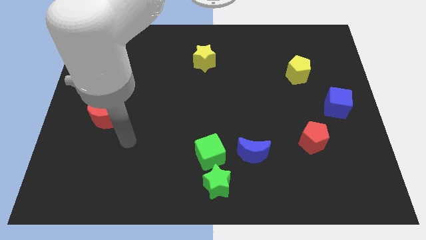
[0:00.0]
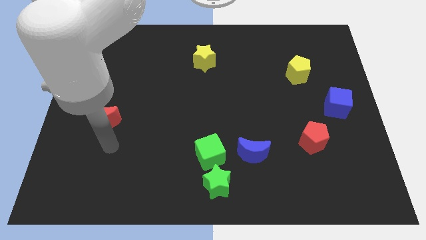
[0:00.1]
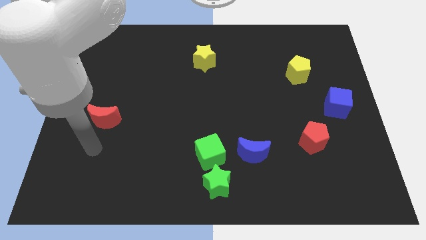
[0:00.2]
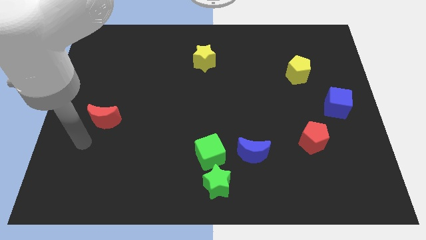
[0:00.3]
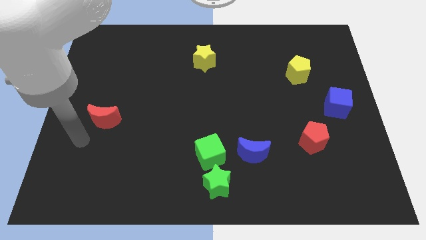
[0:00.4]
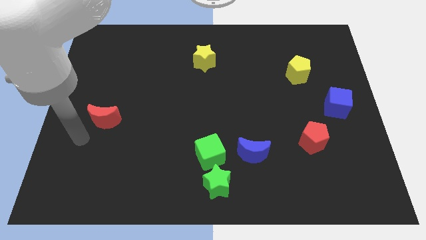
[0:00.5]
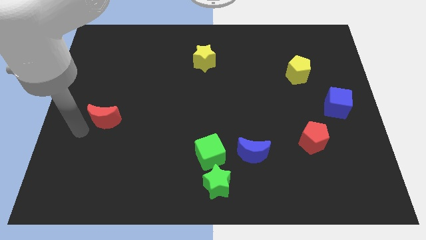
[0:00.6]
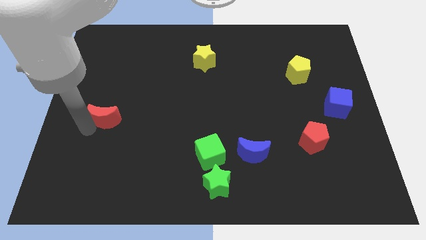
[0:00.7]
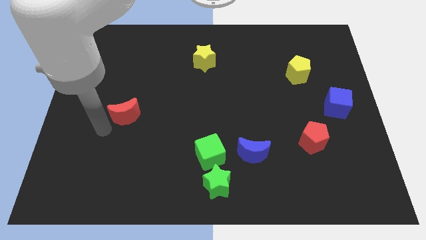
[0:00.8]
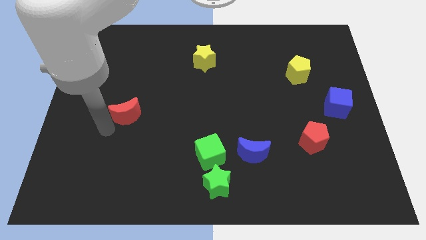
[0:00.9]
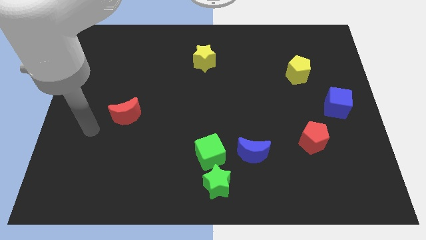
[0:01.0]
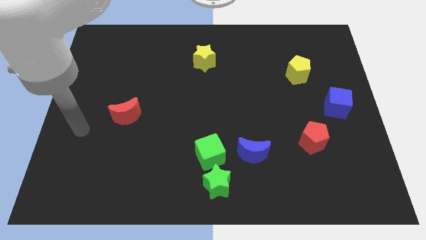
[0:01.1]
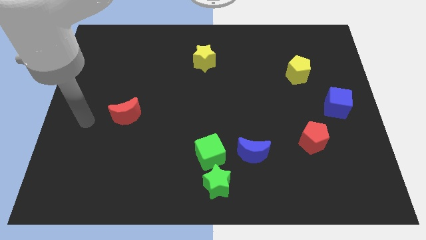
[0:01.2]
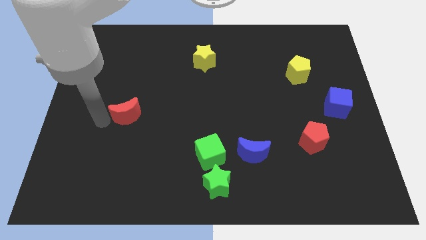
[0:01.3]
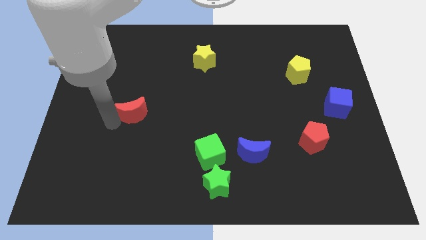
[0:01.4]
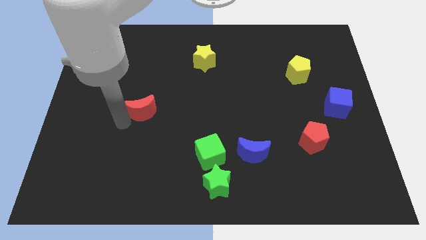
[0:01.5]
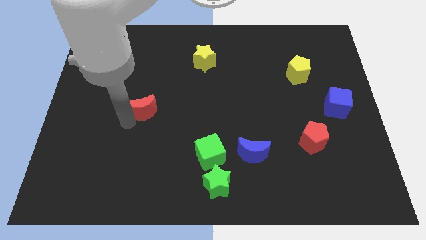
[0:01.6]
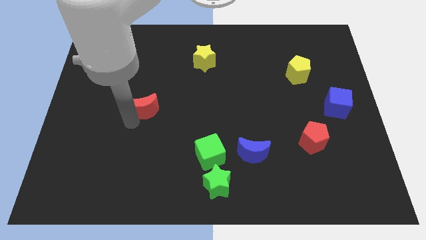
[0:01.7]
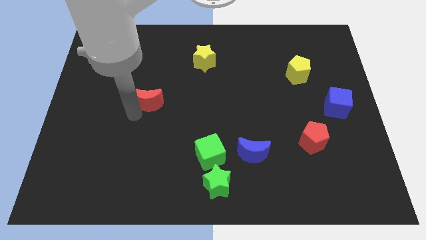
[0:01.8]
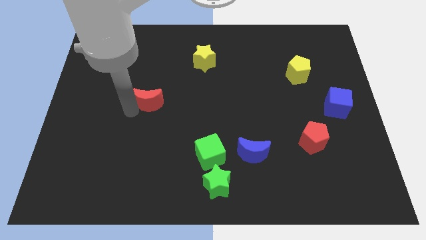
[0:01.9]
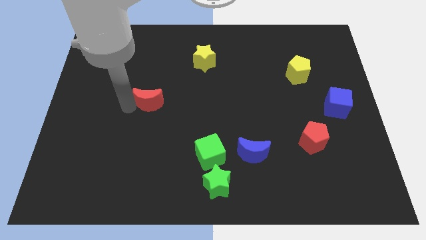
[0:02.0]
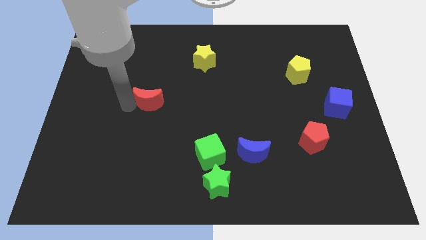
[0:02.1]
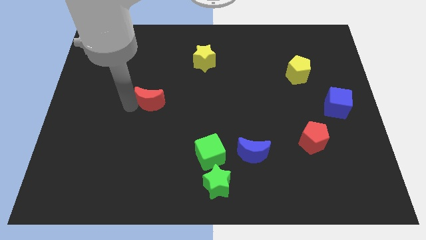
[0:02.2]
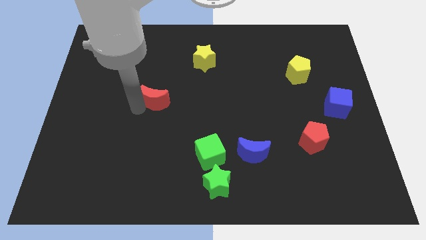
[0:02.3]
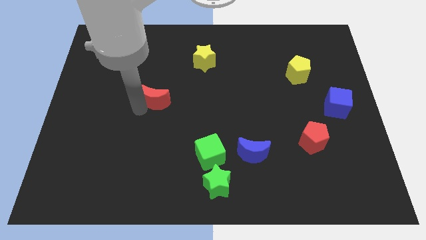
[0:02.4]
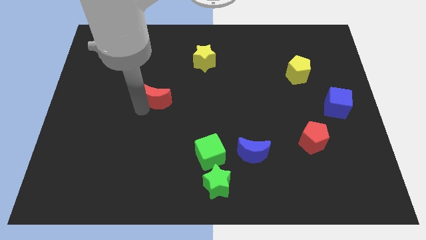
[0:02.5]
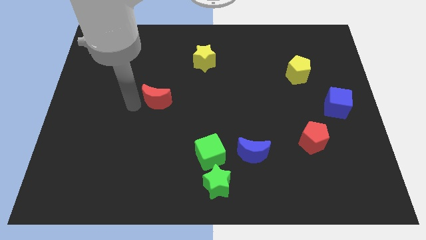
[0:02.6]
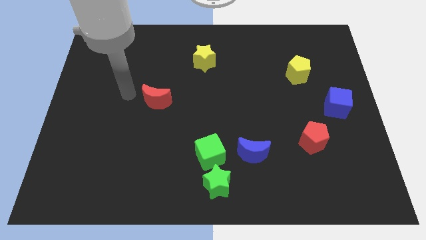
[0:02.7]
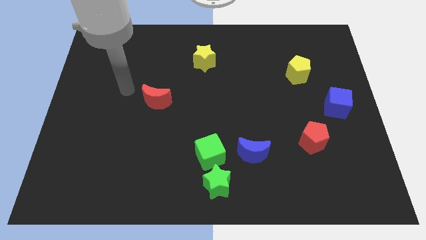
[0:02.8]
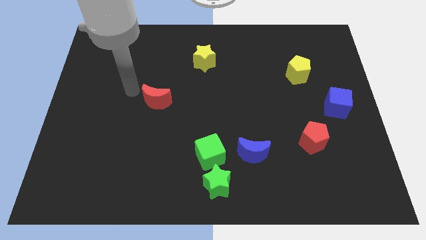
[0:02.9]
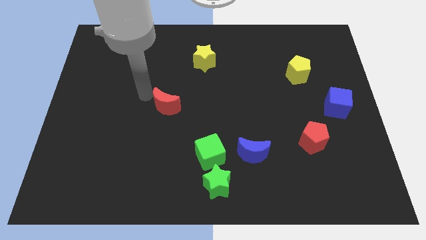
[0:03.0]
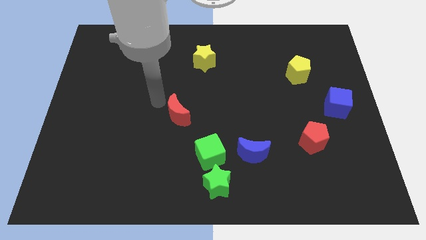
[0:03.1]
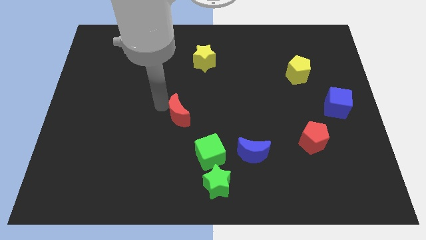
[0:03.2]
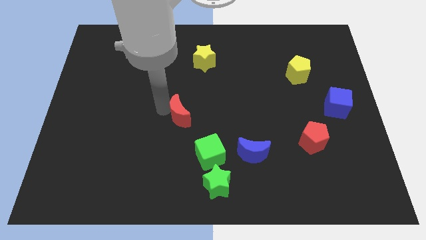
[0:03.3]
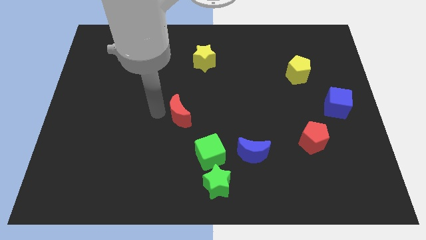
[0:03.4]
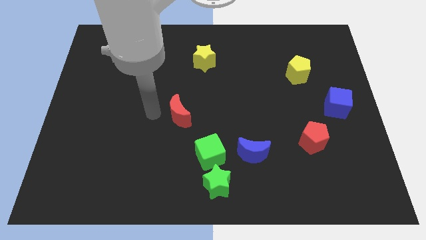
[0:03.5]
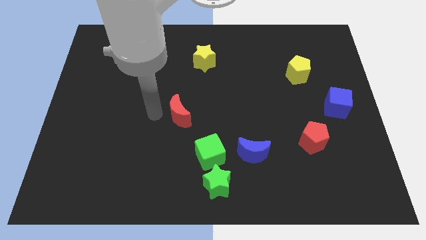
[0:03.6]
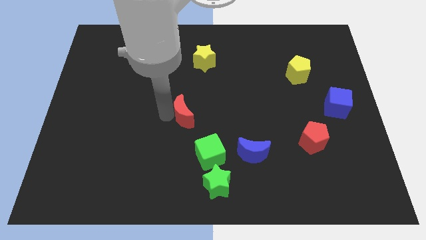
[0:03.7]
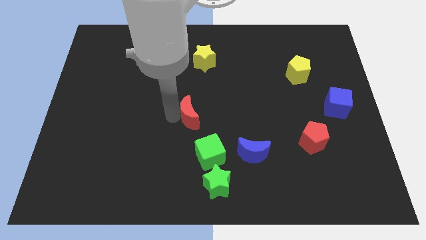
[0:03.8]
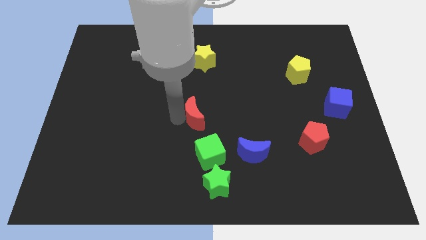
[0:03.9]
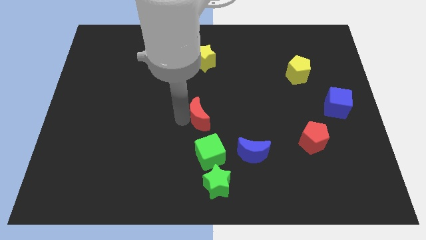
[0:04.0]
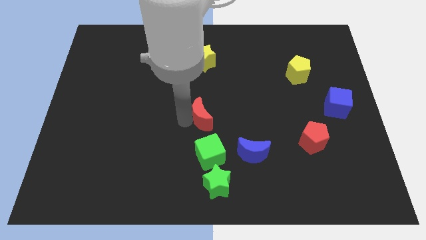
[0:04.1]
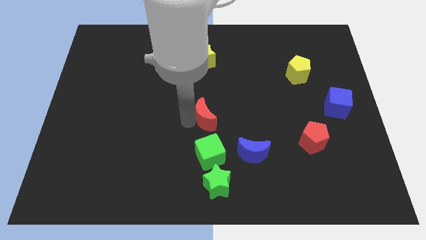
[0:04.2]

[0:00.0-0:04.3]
move the red crescent to the top side of the green cube

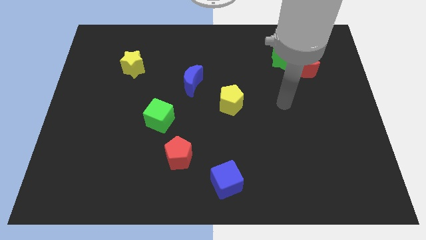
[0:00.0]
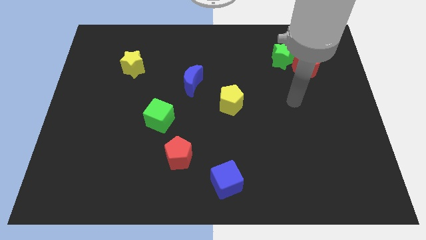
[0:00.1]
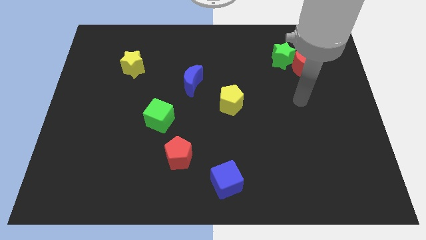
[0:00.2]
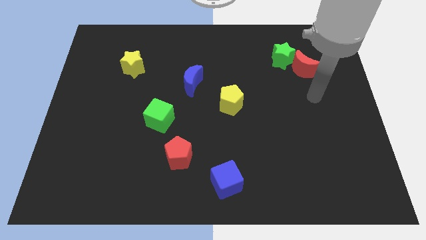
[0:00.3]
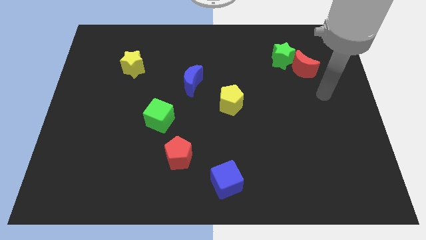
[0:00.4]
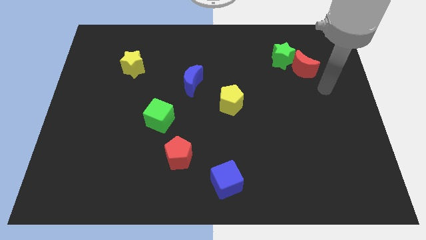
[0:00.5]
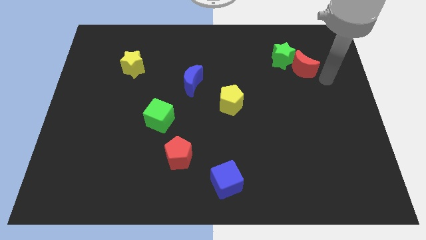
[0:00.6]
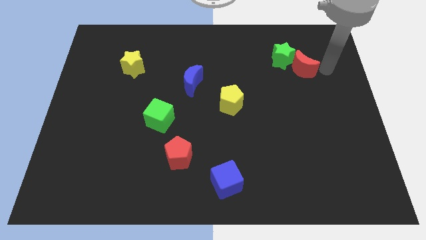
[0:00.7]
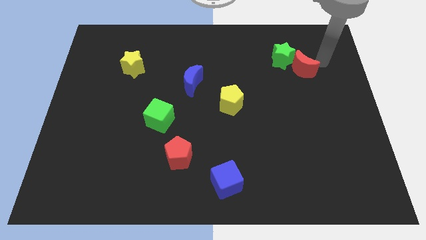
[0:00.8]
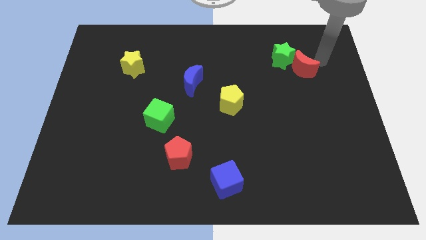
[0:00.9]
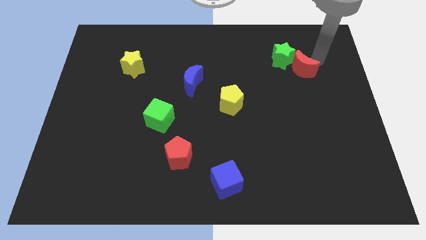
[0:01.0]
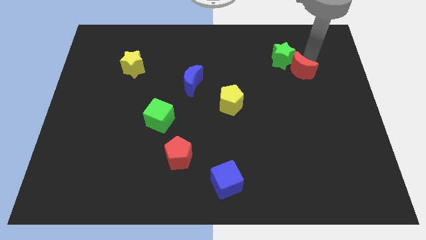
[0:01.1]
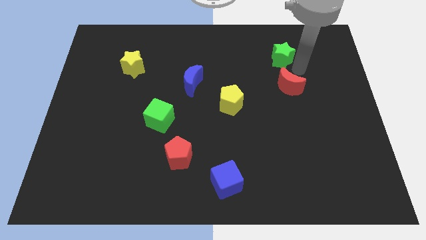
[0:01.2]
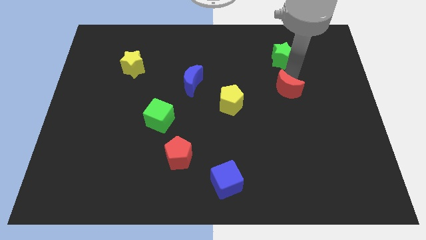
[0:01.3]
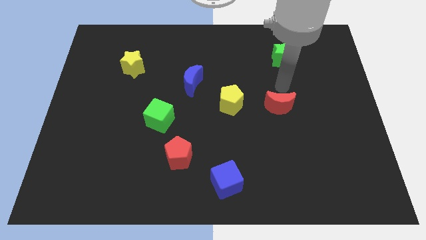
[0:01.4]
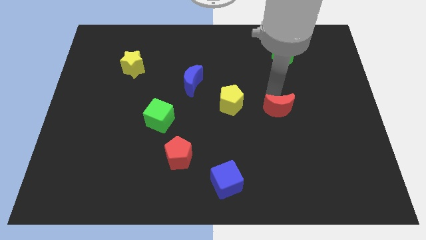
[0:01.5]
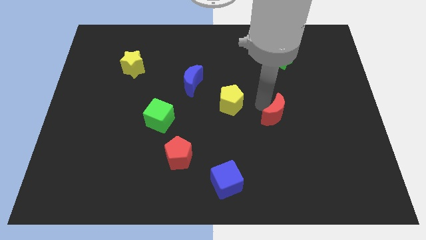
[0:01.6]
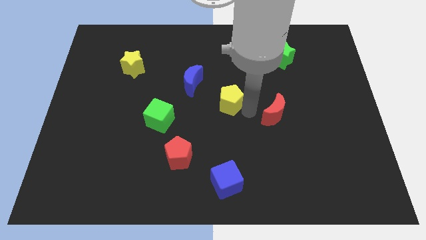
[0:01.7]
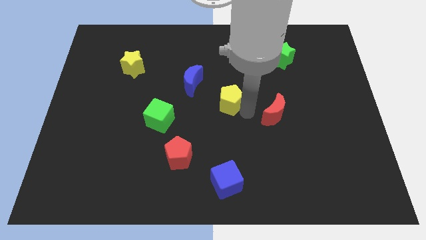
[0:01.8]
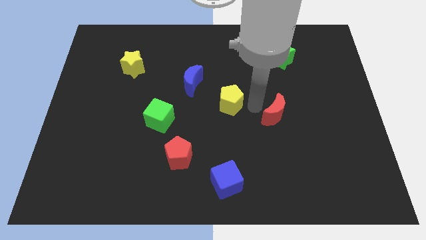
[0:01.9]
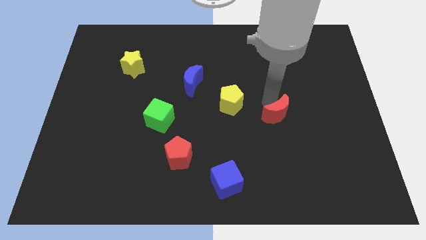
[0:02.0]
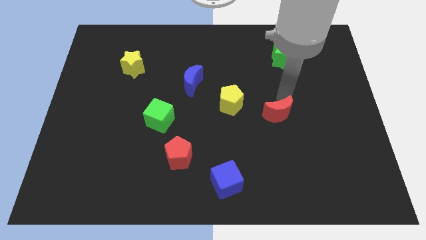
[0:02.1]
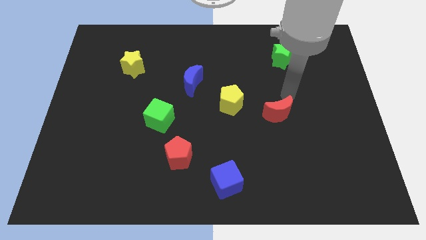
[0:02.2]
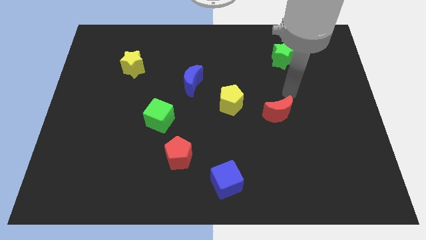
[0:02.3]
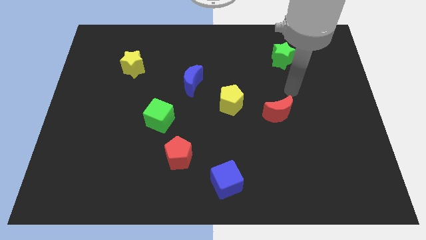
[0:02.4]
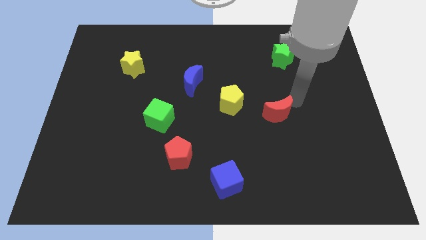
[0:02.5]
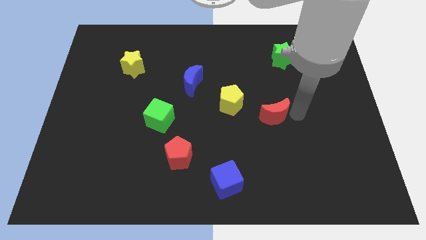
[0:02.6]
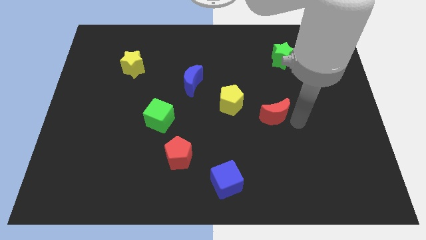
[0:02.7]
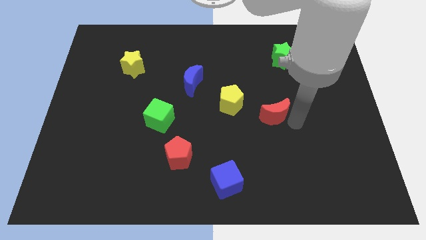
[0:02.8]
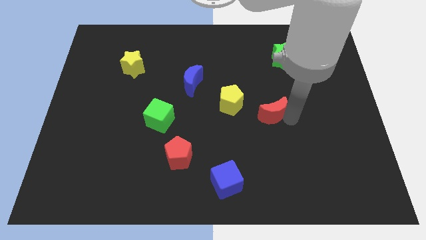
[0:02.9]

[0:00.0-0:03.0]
place the red moon parallel right to yellow pentagon

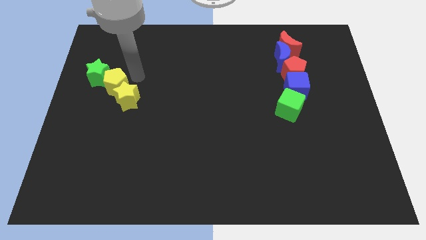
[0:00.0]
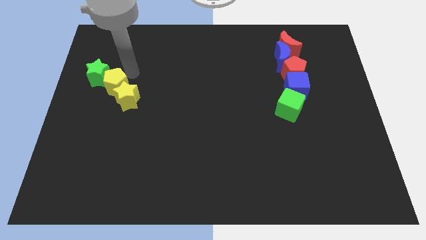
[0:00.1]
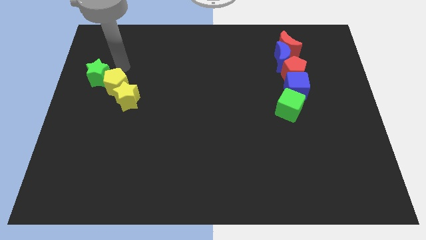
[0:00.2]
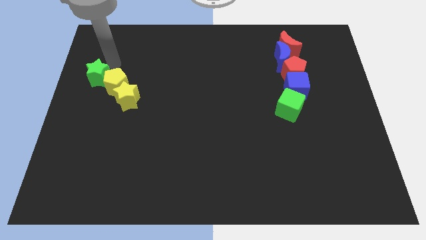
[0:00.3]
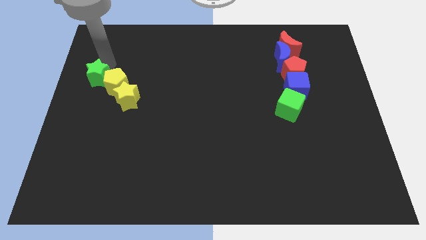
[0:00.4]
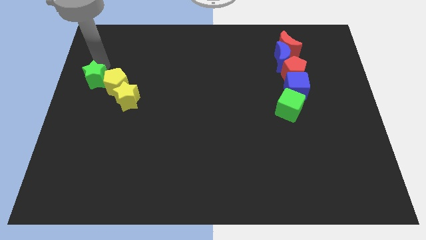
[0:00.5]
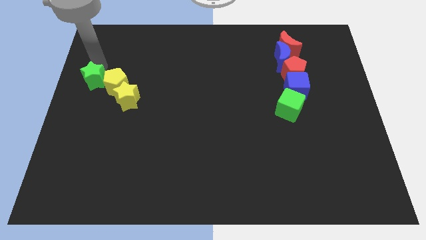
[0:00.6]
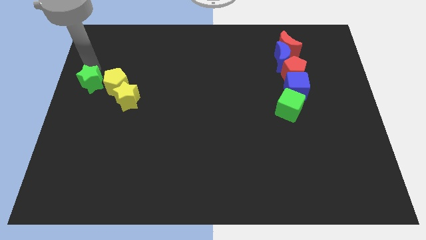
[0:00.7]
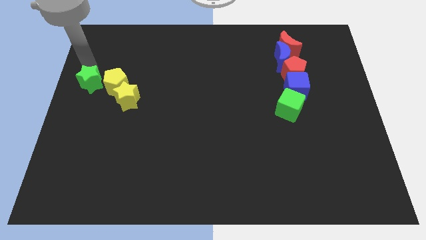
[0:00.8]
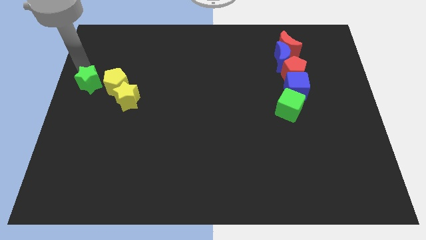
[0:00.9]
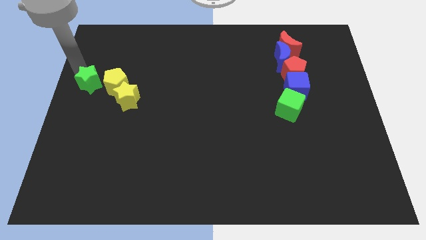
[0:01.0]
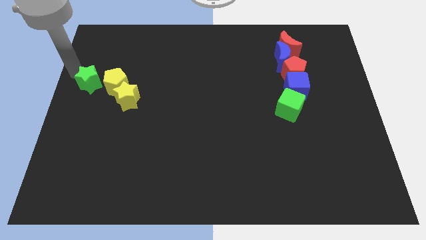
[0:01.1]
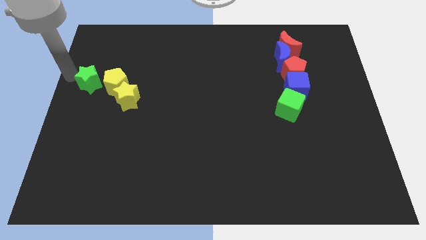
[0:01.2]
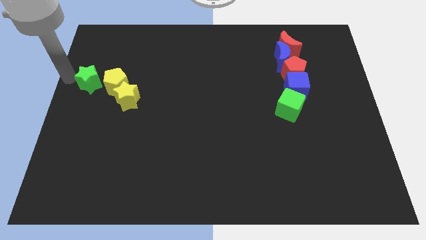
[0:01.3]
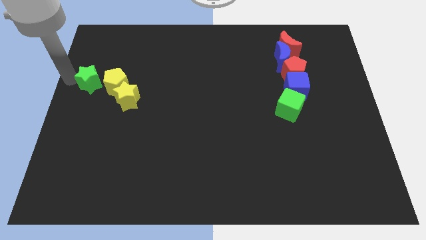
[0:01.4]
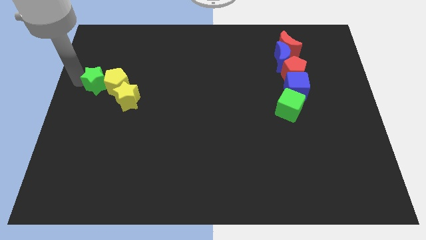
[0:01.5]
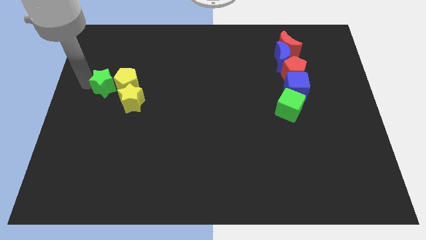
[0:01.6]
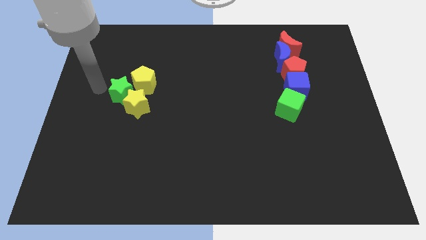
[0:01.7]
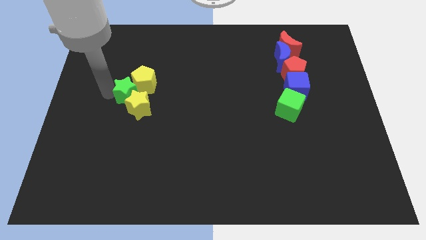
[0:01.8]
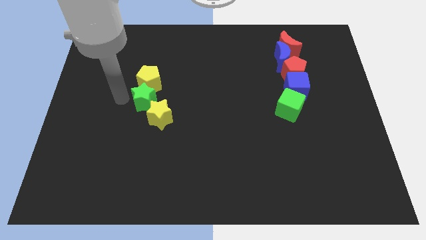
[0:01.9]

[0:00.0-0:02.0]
place the green star diagonally in between the yellow blocks
